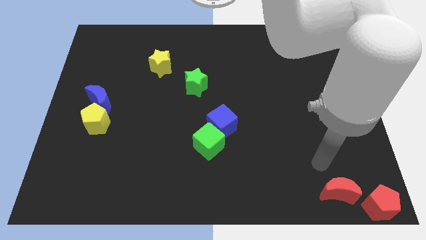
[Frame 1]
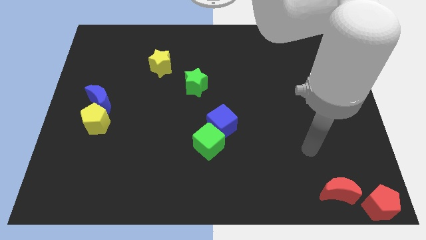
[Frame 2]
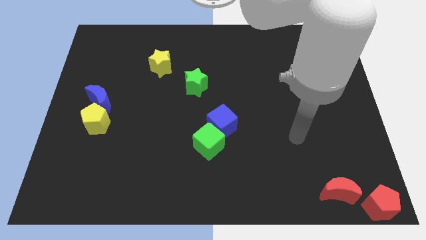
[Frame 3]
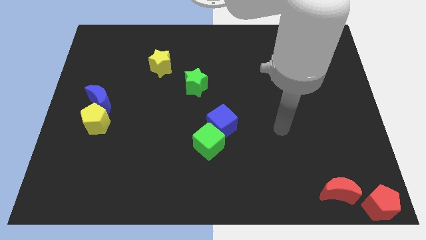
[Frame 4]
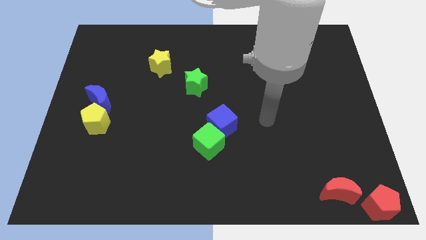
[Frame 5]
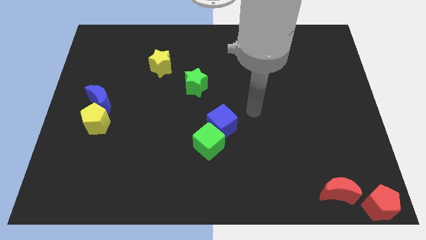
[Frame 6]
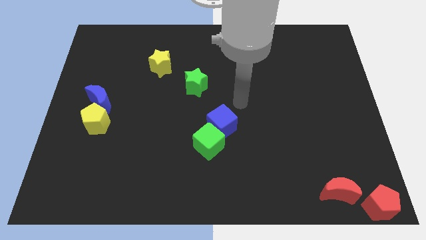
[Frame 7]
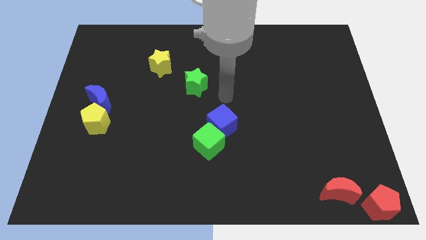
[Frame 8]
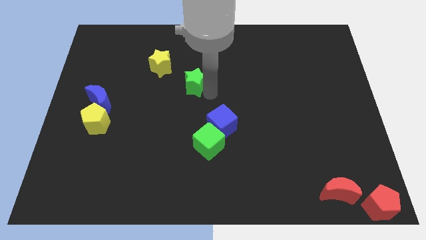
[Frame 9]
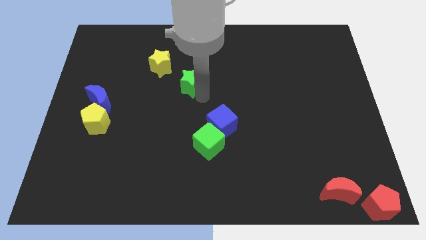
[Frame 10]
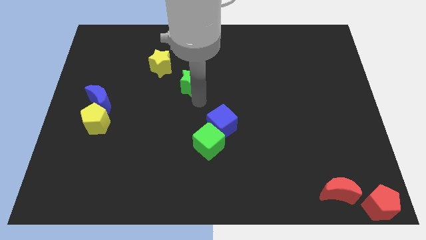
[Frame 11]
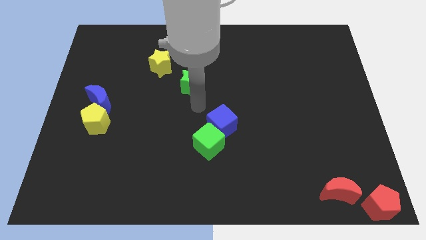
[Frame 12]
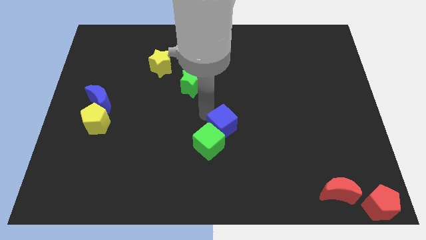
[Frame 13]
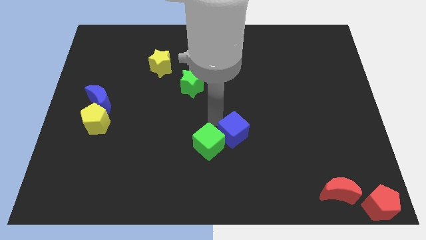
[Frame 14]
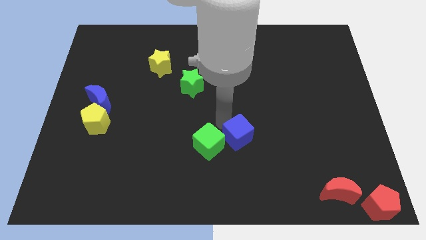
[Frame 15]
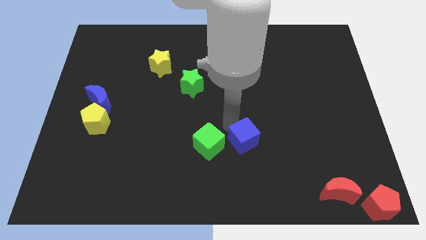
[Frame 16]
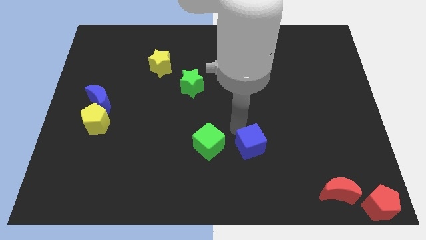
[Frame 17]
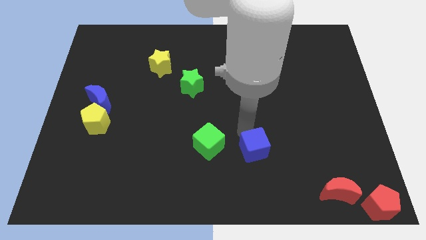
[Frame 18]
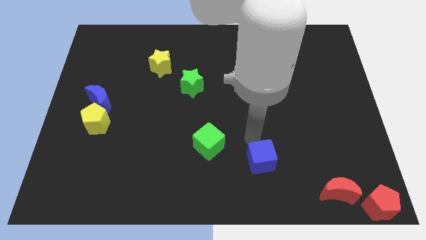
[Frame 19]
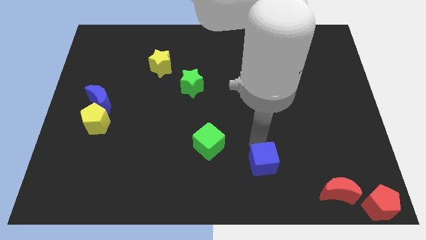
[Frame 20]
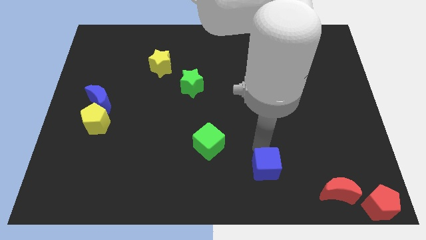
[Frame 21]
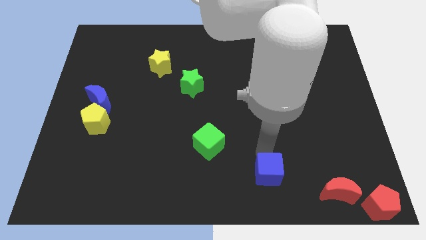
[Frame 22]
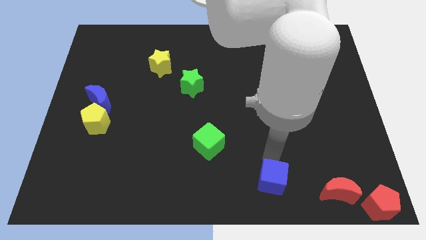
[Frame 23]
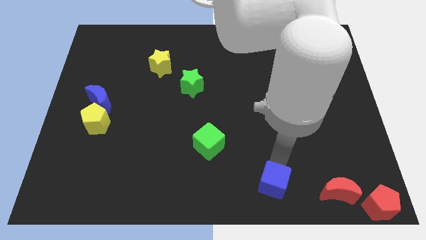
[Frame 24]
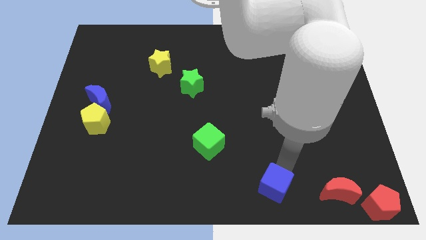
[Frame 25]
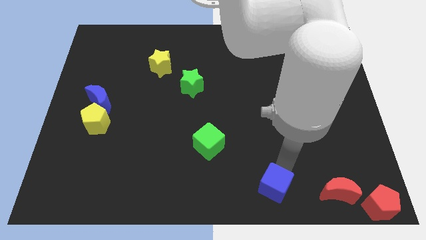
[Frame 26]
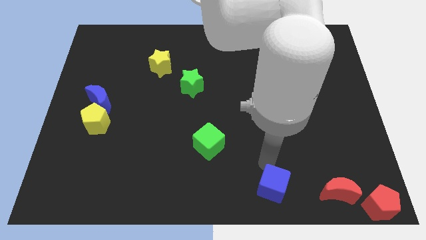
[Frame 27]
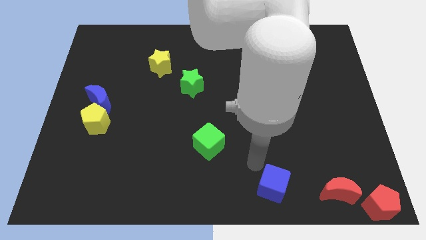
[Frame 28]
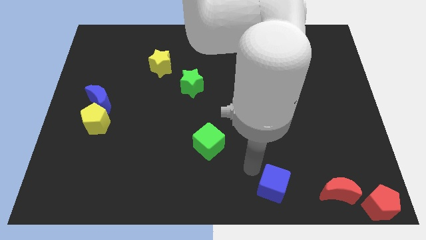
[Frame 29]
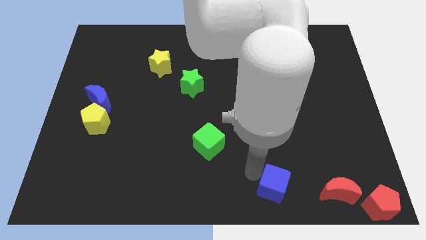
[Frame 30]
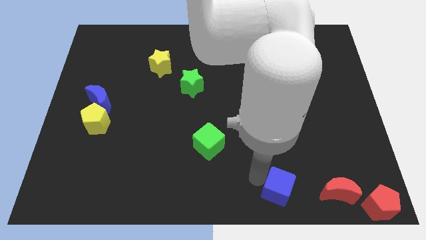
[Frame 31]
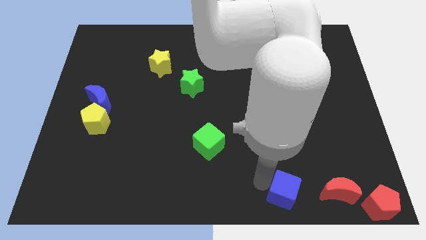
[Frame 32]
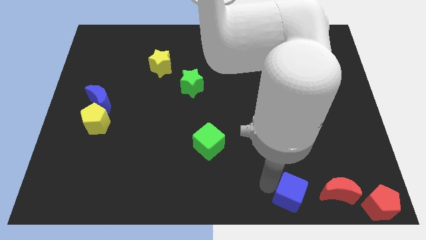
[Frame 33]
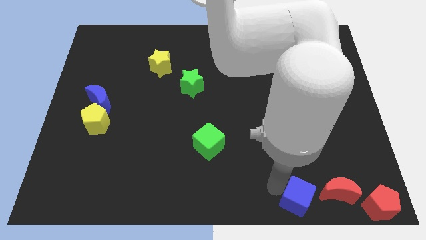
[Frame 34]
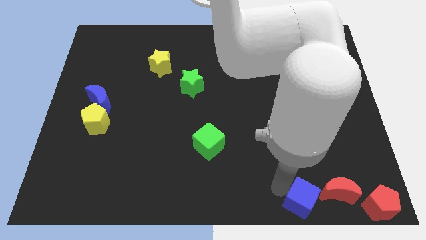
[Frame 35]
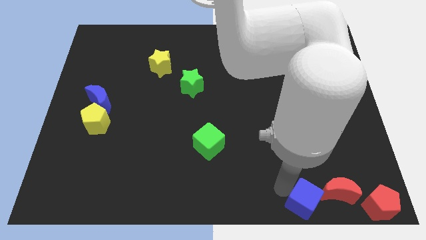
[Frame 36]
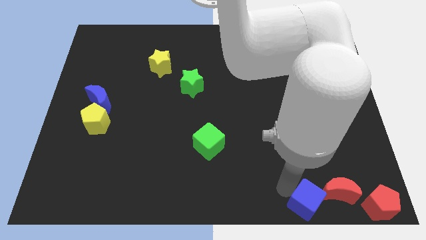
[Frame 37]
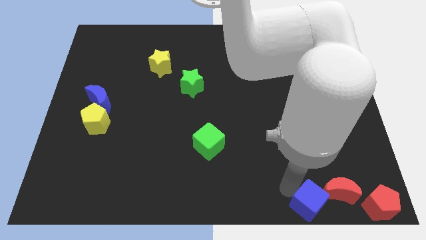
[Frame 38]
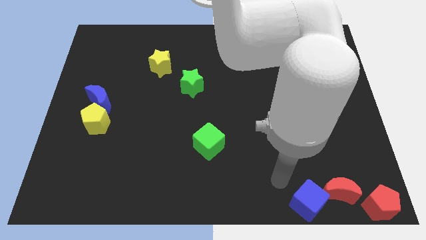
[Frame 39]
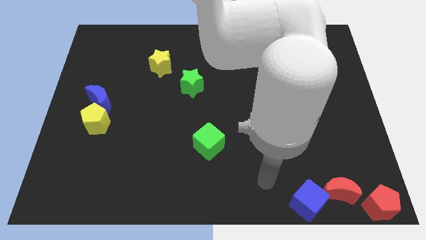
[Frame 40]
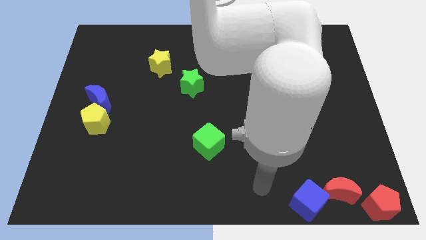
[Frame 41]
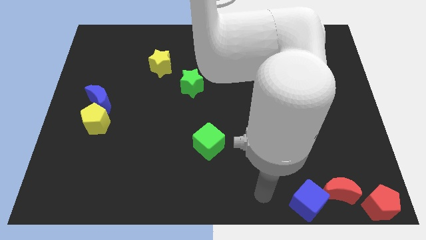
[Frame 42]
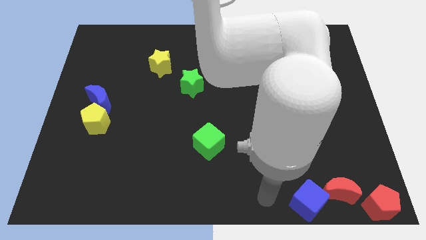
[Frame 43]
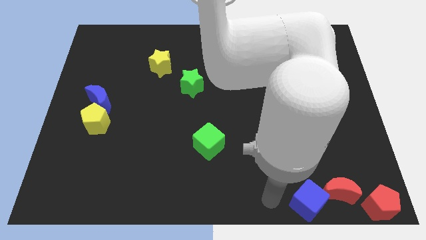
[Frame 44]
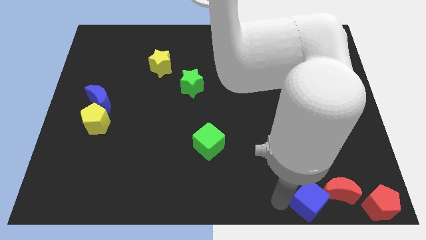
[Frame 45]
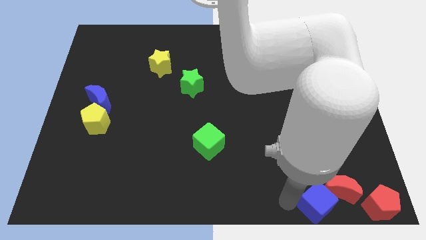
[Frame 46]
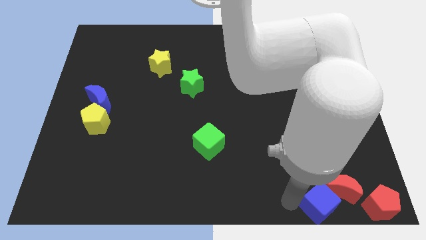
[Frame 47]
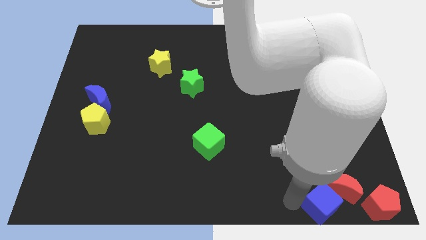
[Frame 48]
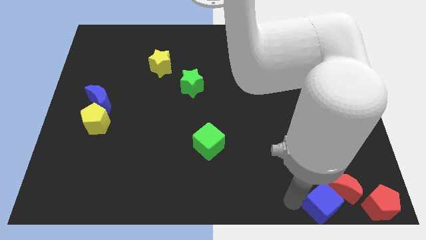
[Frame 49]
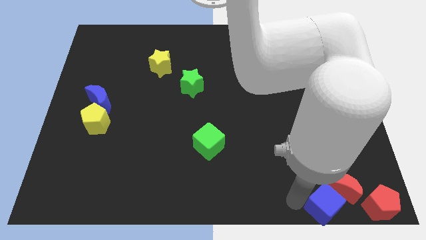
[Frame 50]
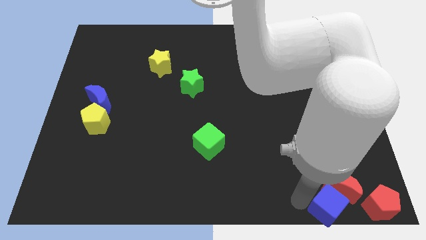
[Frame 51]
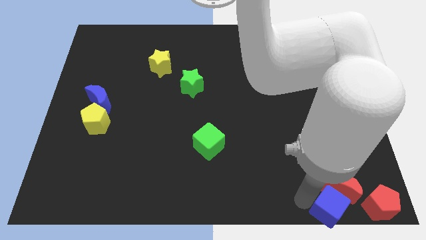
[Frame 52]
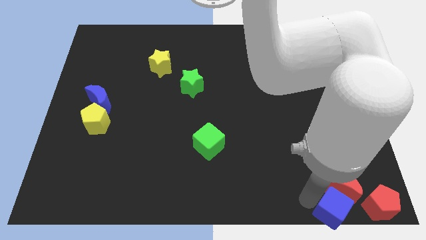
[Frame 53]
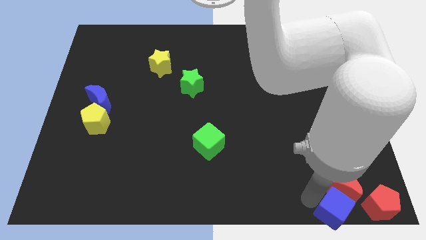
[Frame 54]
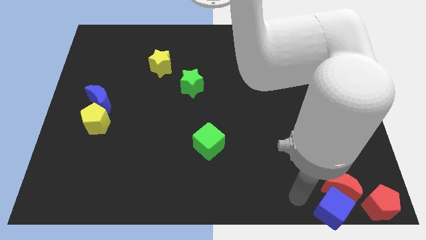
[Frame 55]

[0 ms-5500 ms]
move the blue cube into the bottom side of the red crescent

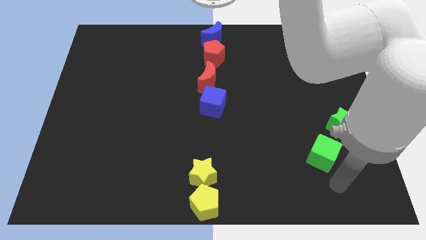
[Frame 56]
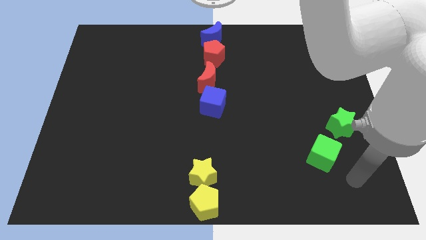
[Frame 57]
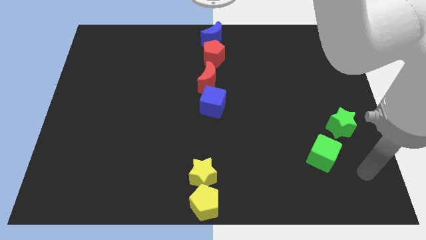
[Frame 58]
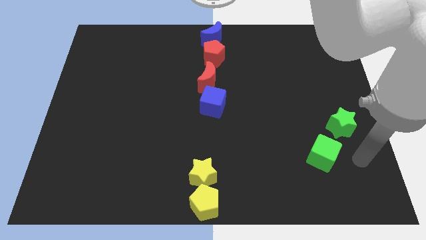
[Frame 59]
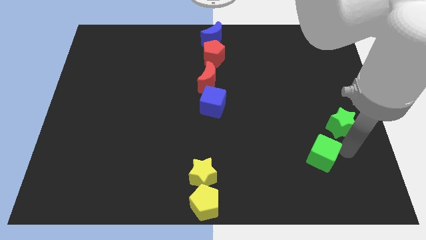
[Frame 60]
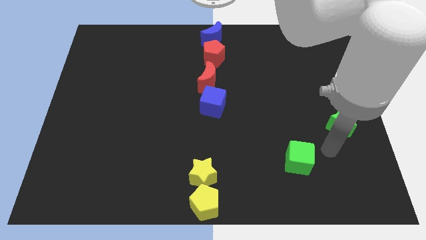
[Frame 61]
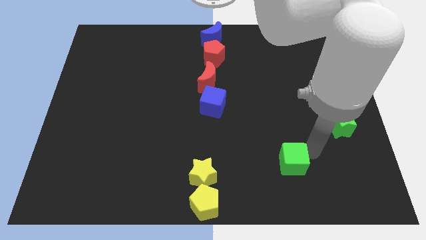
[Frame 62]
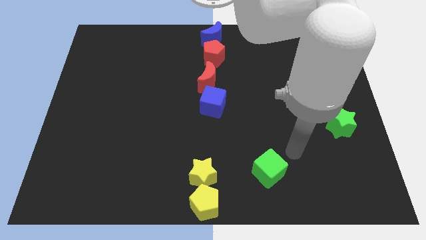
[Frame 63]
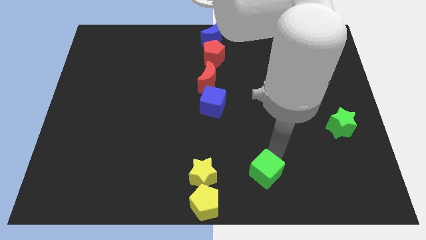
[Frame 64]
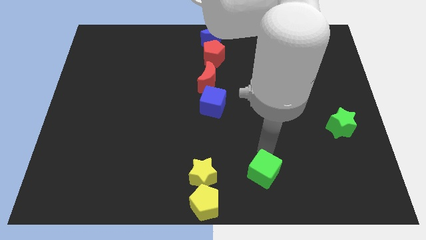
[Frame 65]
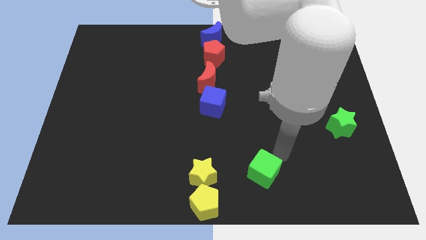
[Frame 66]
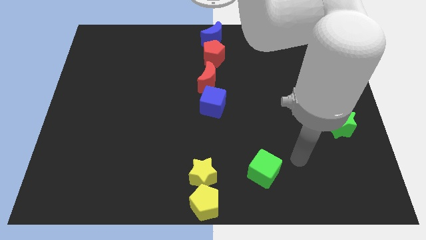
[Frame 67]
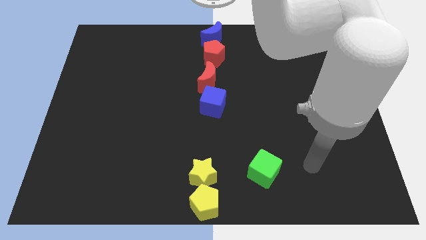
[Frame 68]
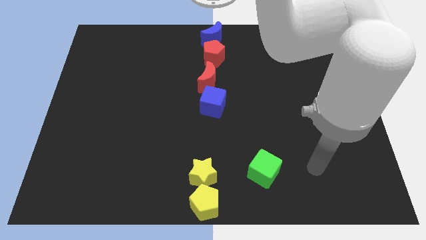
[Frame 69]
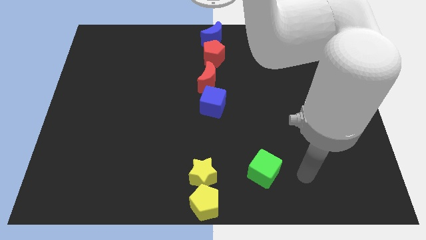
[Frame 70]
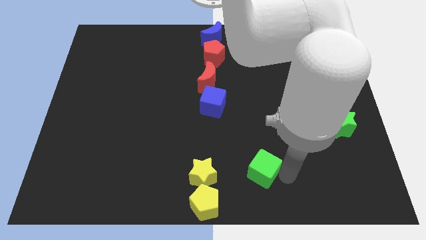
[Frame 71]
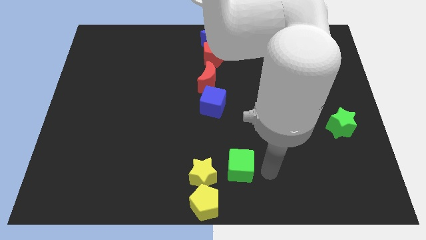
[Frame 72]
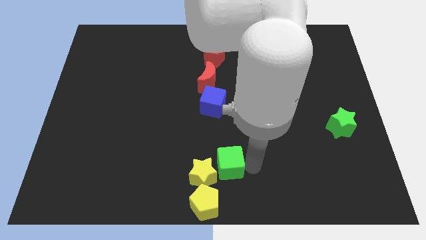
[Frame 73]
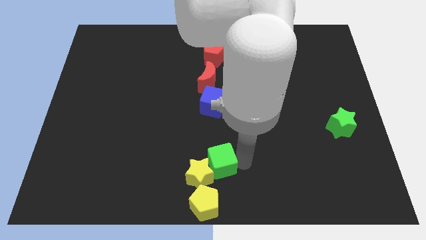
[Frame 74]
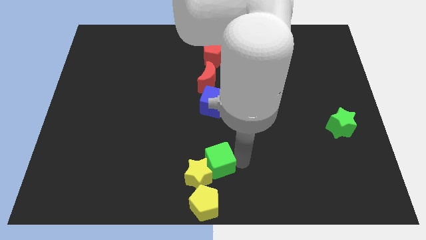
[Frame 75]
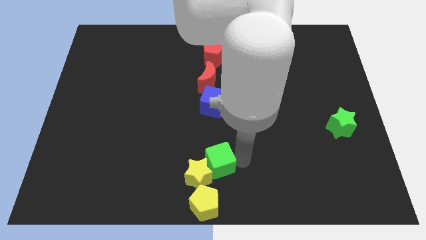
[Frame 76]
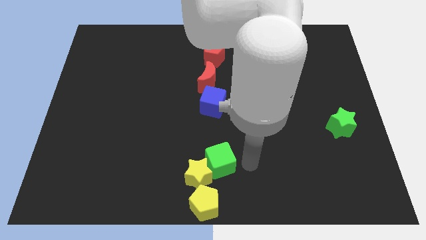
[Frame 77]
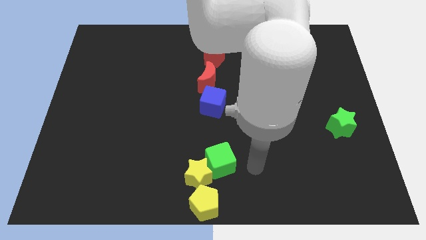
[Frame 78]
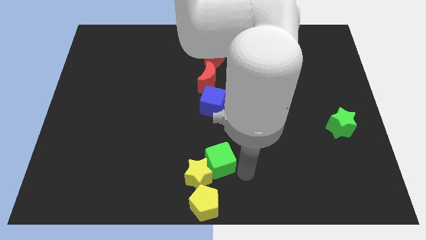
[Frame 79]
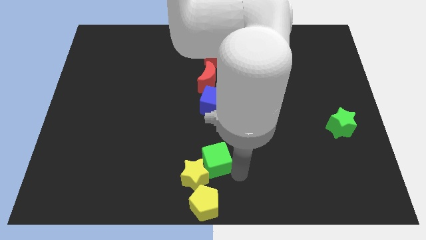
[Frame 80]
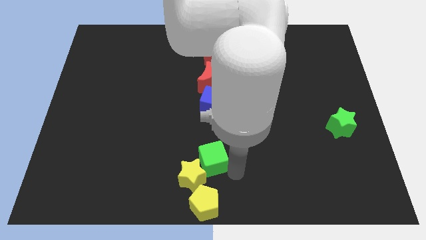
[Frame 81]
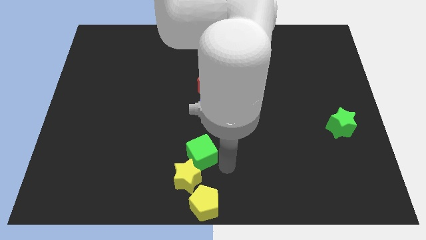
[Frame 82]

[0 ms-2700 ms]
push green cube below blue cube

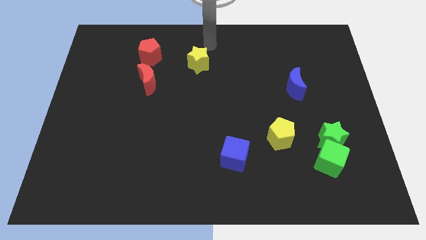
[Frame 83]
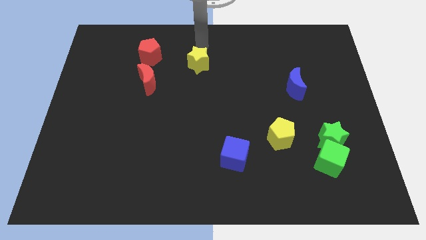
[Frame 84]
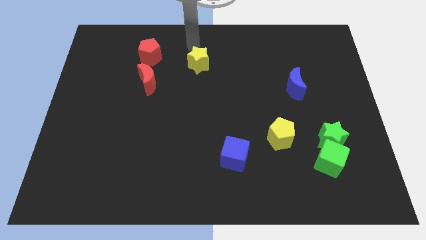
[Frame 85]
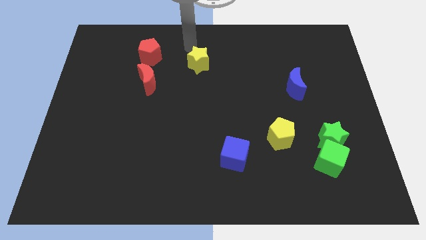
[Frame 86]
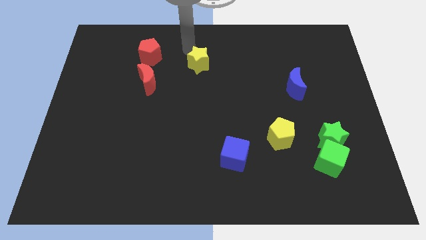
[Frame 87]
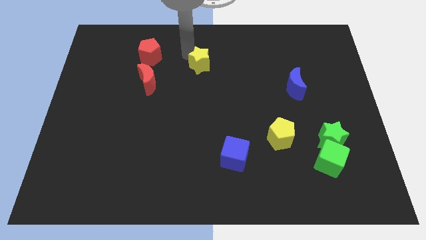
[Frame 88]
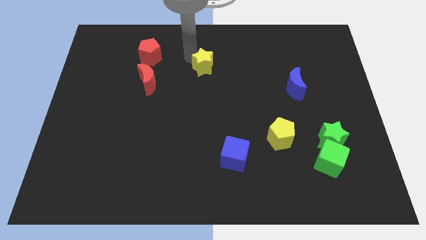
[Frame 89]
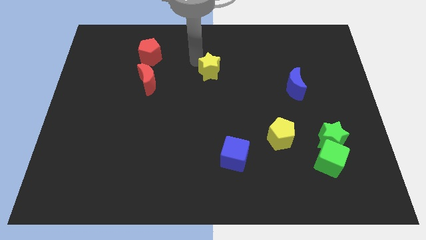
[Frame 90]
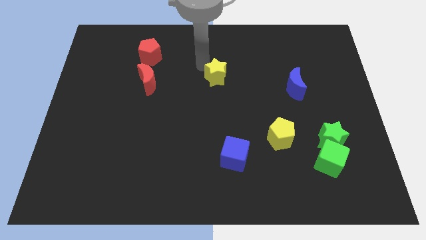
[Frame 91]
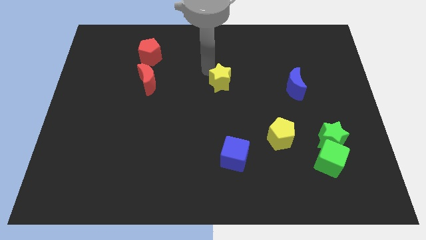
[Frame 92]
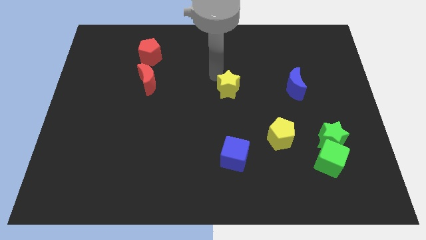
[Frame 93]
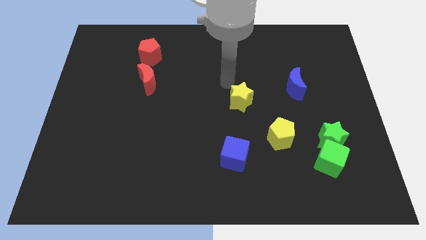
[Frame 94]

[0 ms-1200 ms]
push the yellow star to the center of the board
